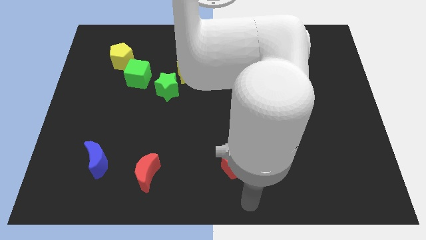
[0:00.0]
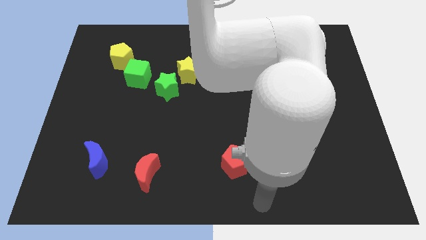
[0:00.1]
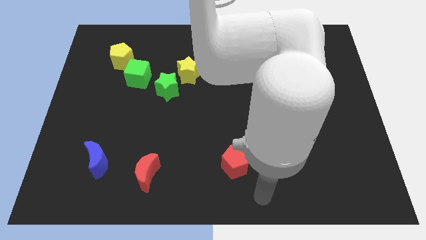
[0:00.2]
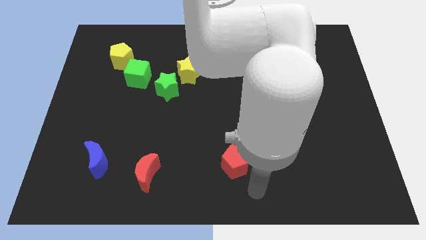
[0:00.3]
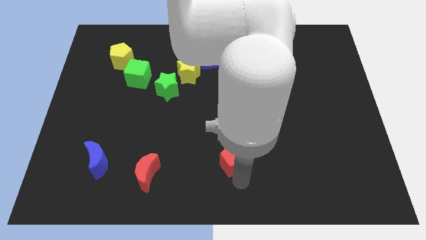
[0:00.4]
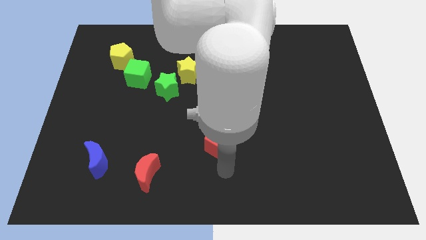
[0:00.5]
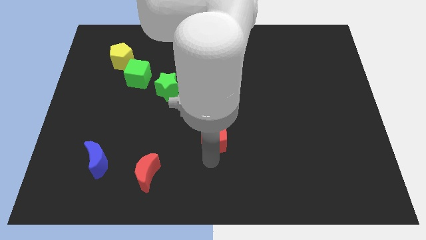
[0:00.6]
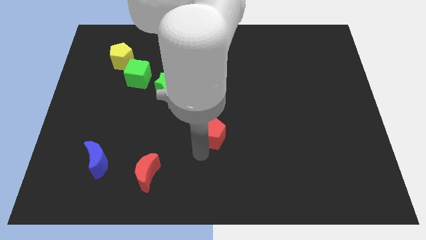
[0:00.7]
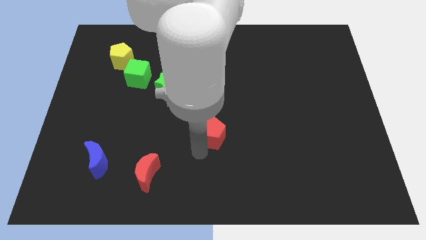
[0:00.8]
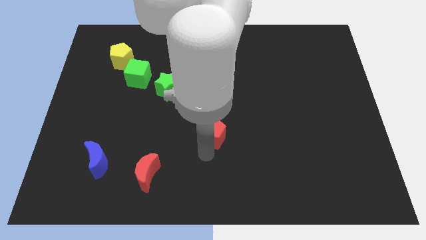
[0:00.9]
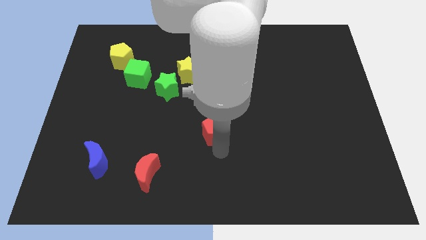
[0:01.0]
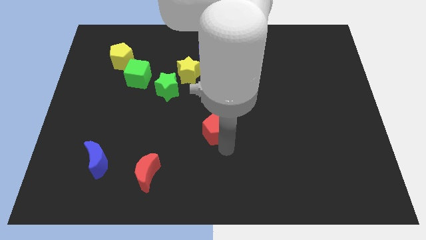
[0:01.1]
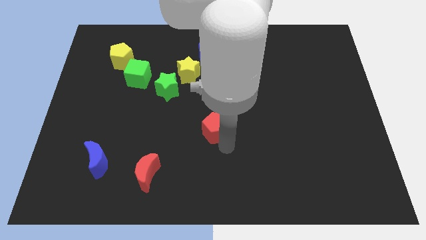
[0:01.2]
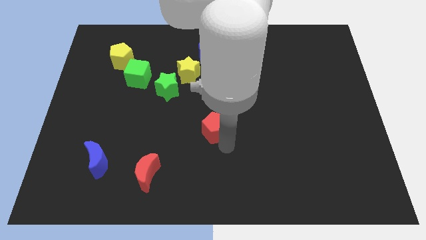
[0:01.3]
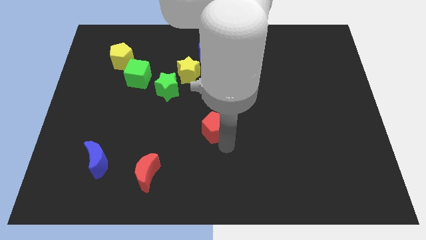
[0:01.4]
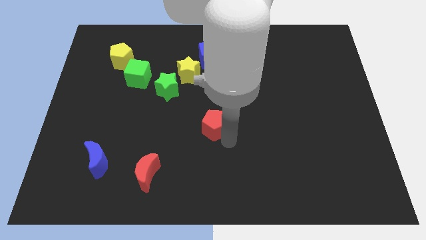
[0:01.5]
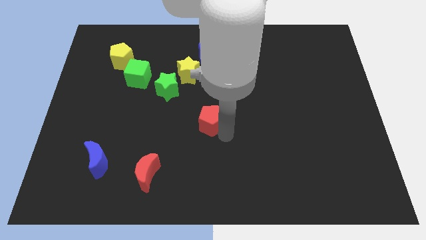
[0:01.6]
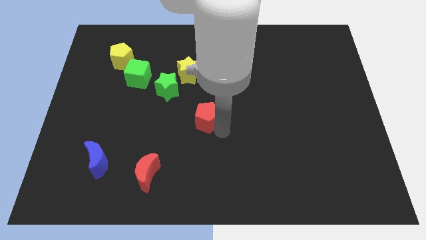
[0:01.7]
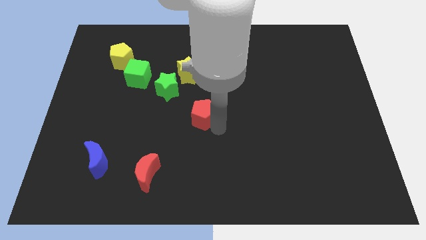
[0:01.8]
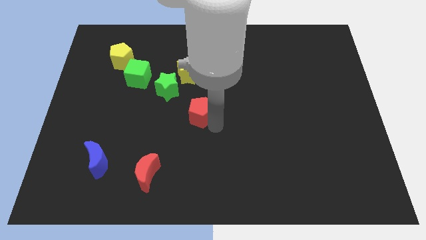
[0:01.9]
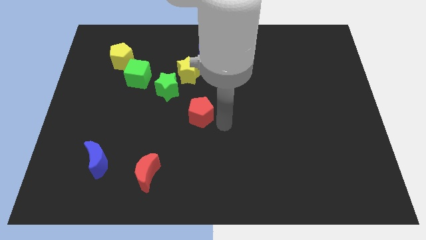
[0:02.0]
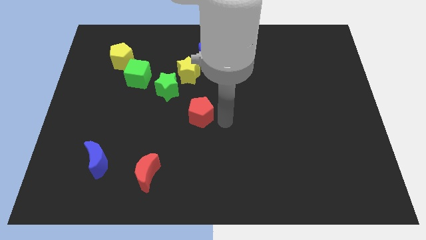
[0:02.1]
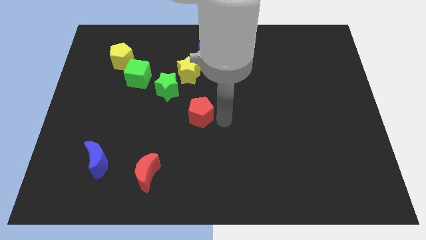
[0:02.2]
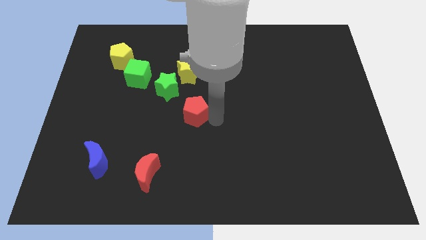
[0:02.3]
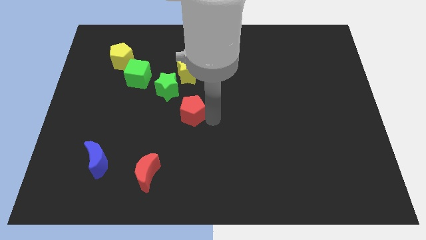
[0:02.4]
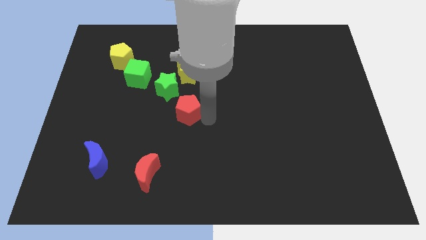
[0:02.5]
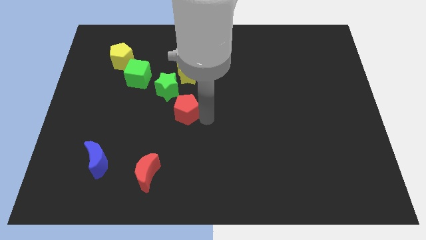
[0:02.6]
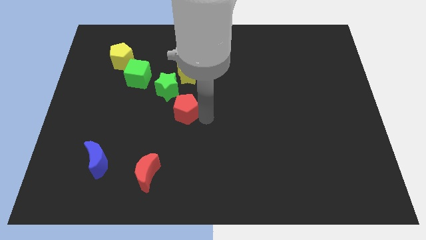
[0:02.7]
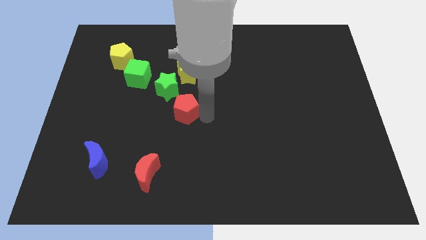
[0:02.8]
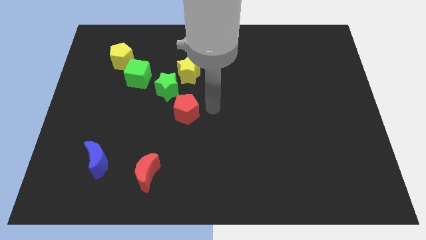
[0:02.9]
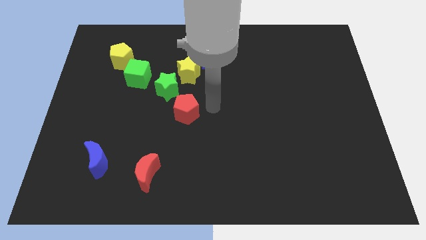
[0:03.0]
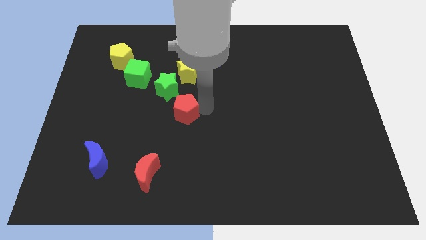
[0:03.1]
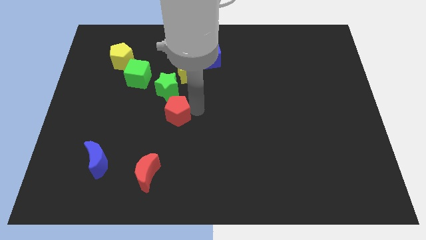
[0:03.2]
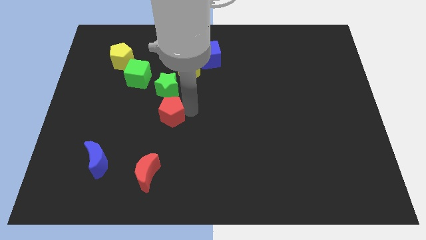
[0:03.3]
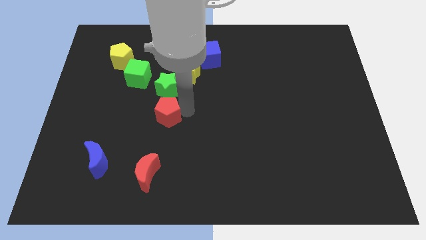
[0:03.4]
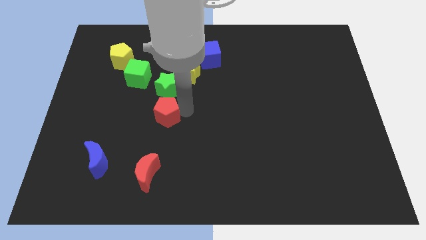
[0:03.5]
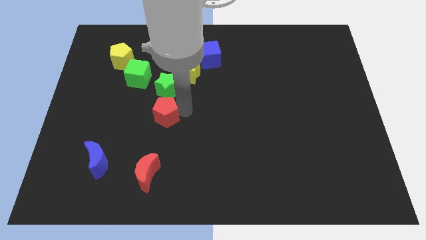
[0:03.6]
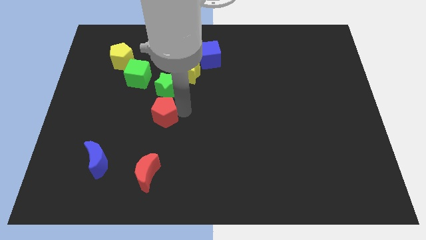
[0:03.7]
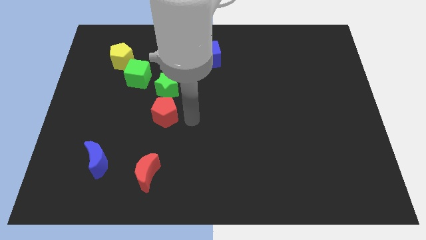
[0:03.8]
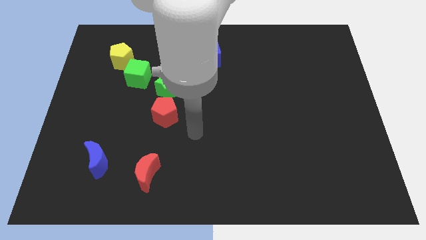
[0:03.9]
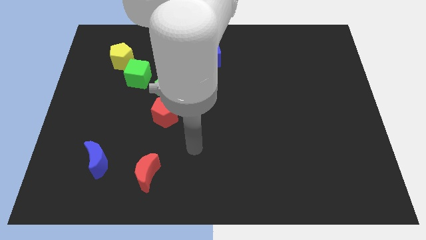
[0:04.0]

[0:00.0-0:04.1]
slide red pentagon below the green star

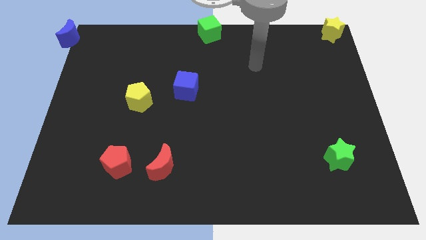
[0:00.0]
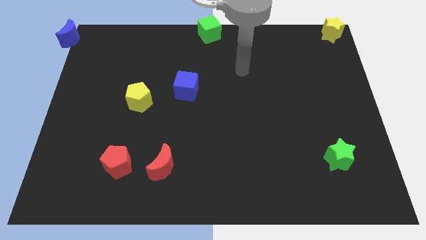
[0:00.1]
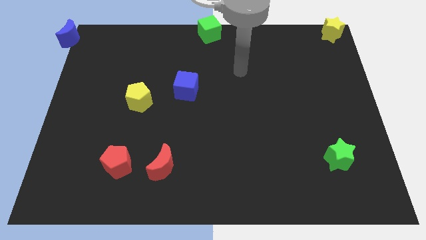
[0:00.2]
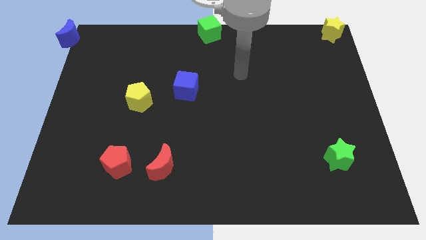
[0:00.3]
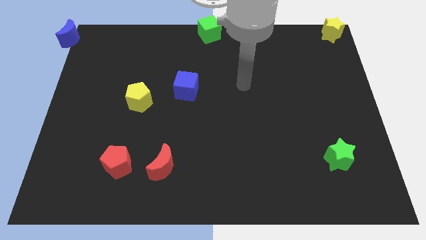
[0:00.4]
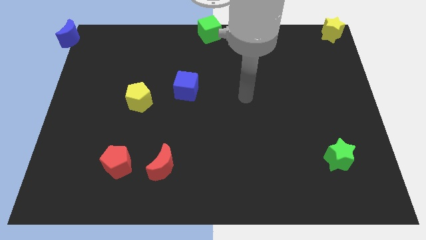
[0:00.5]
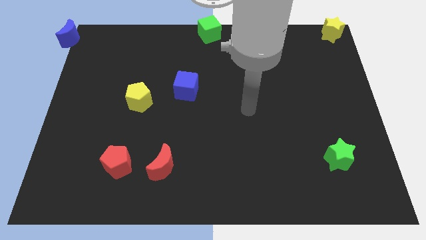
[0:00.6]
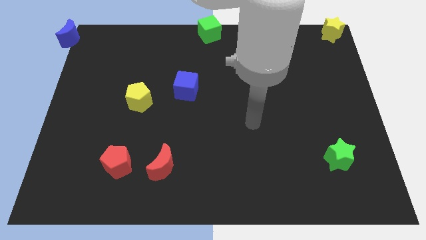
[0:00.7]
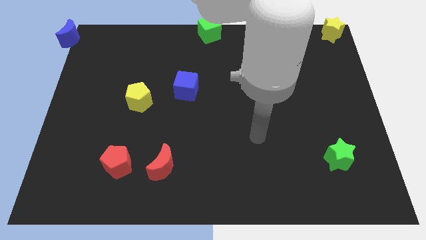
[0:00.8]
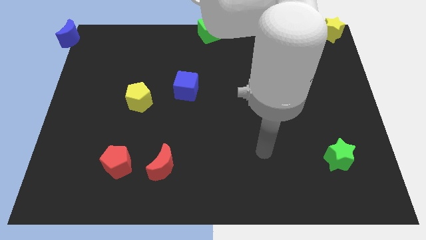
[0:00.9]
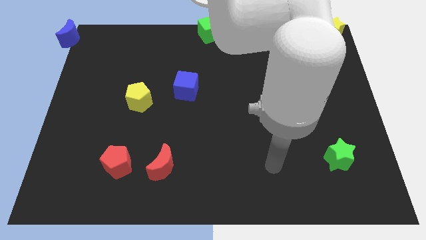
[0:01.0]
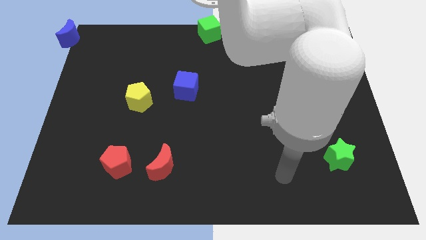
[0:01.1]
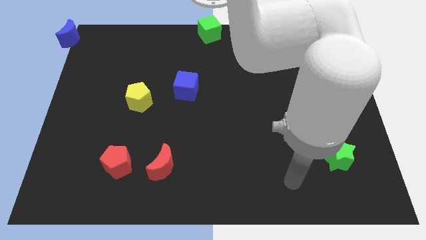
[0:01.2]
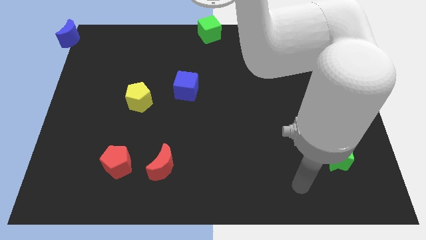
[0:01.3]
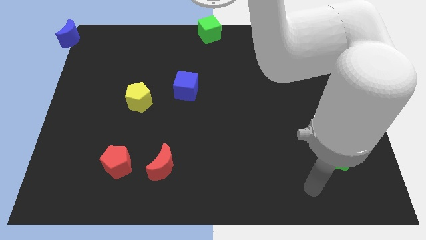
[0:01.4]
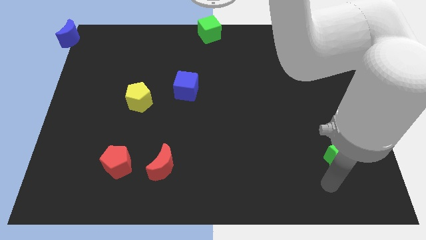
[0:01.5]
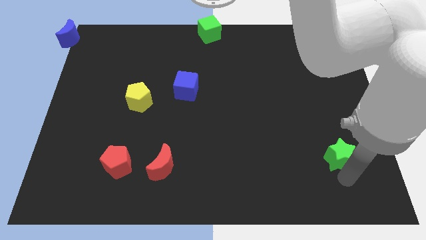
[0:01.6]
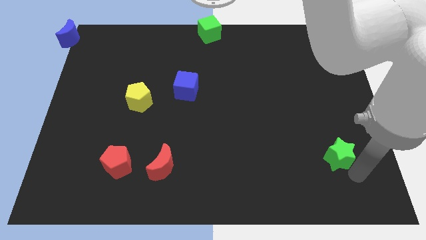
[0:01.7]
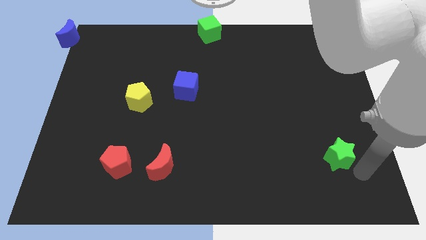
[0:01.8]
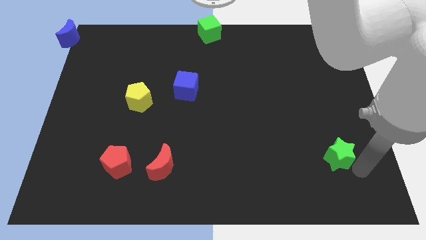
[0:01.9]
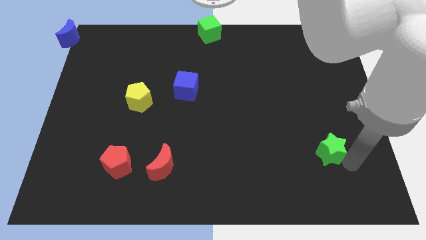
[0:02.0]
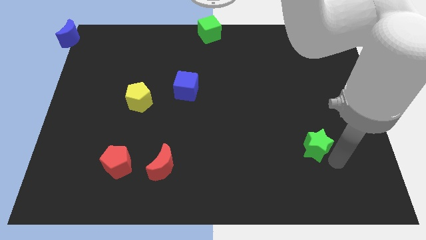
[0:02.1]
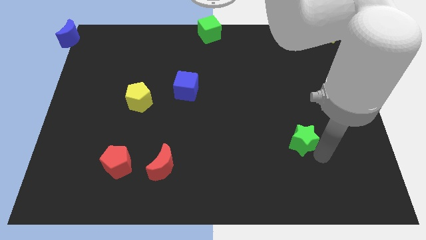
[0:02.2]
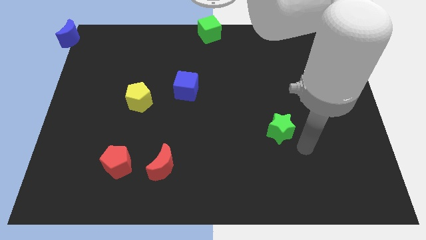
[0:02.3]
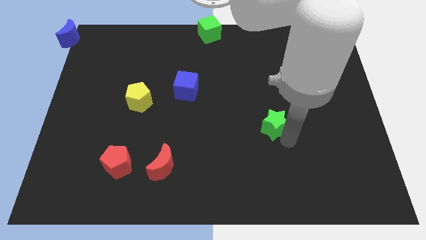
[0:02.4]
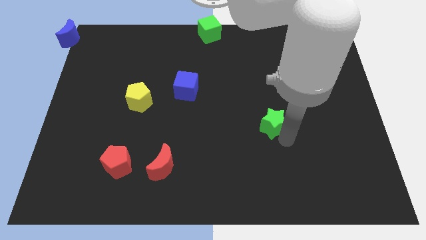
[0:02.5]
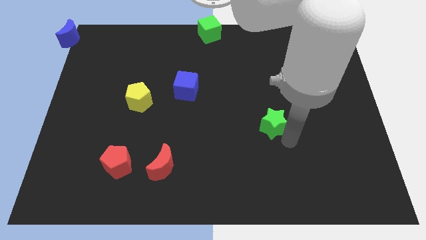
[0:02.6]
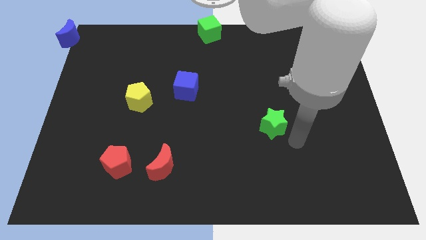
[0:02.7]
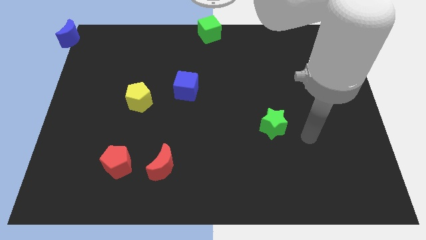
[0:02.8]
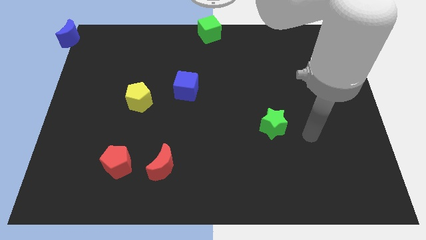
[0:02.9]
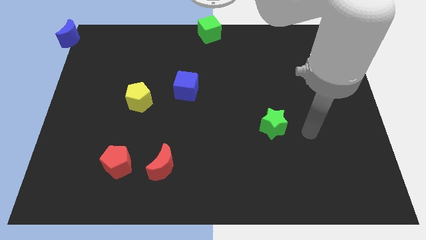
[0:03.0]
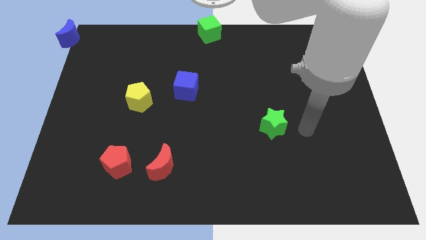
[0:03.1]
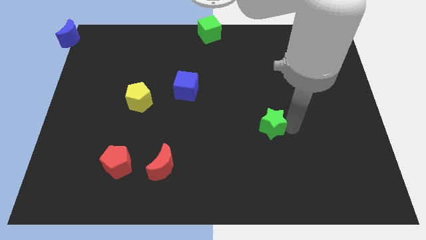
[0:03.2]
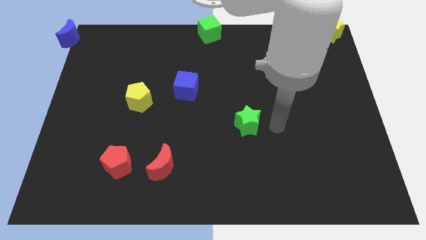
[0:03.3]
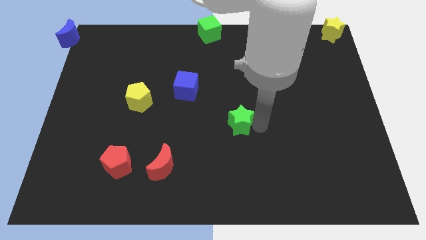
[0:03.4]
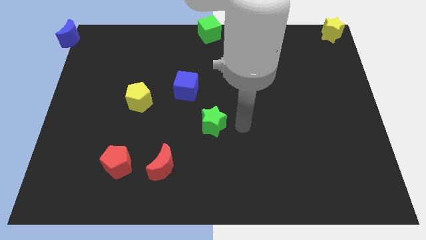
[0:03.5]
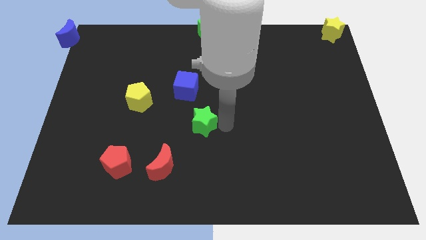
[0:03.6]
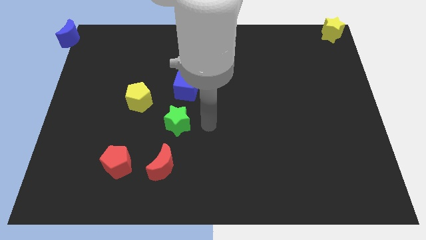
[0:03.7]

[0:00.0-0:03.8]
place green star to the center of the board

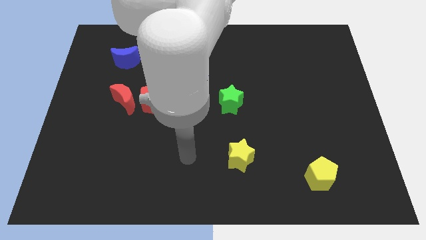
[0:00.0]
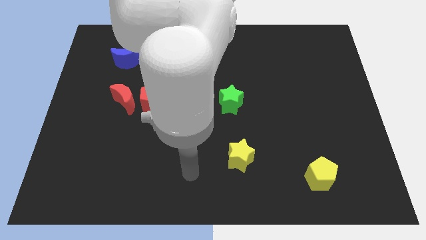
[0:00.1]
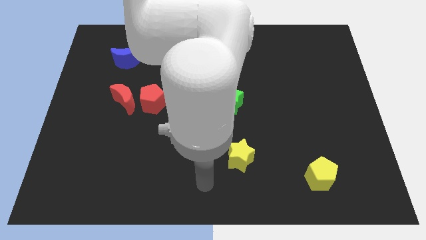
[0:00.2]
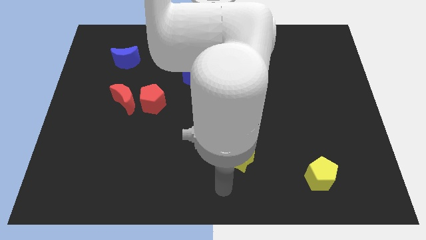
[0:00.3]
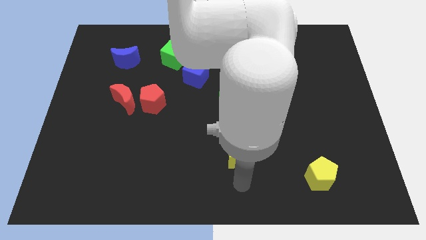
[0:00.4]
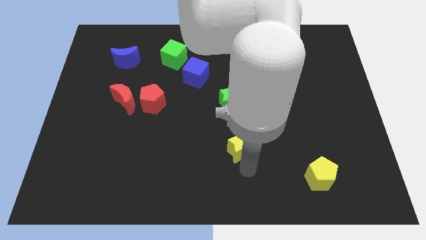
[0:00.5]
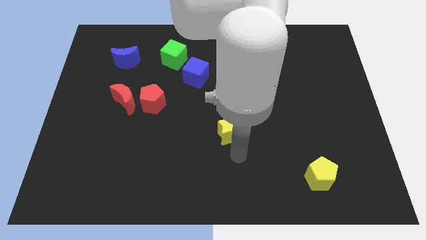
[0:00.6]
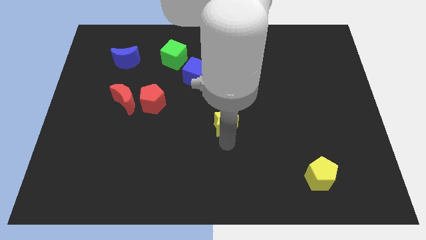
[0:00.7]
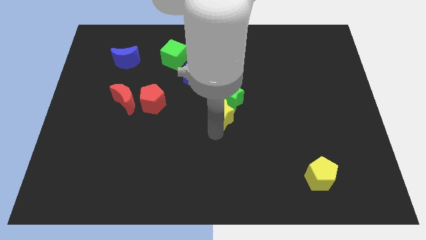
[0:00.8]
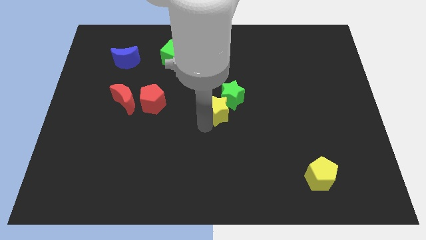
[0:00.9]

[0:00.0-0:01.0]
place yellow star to the bottom left of green star
